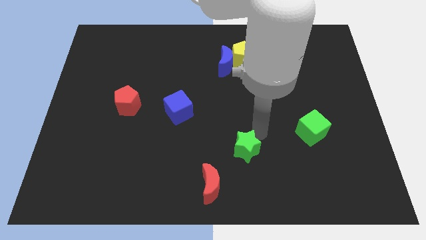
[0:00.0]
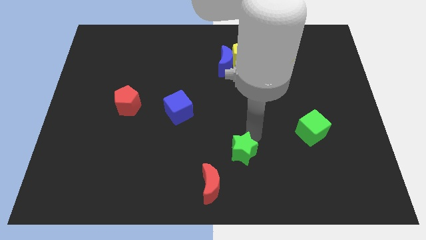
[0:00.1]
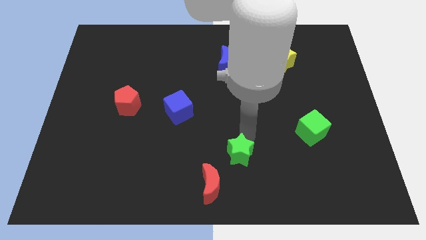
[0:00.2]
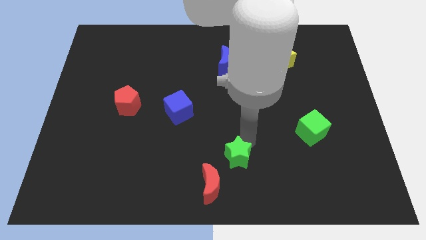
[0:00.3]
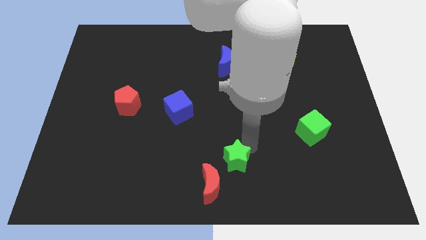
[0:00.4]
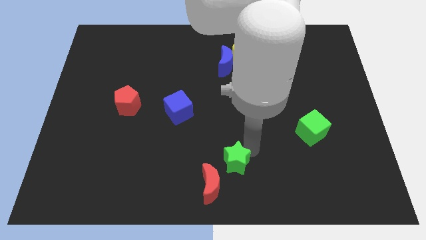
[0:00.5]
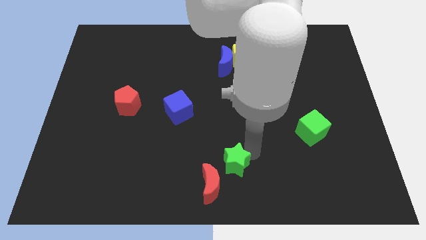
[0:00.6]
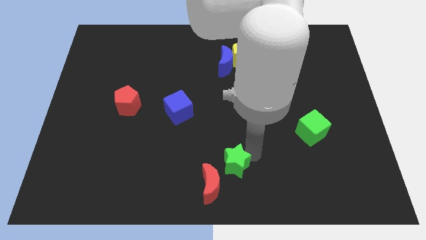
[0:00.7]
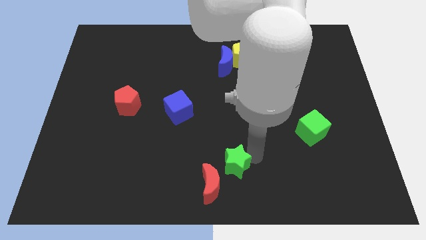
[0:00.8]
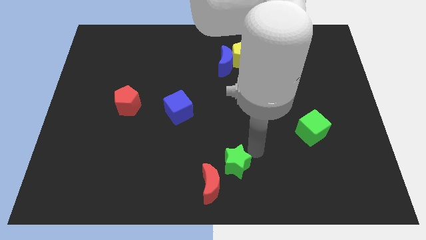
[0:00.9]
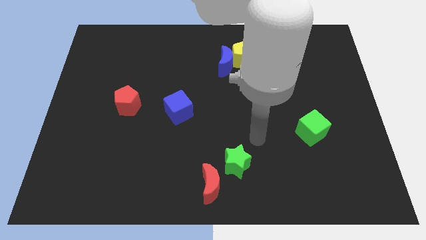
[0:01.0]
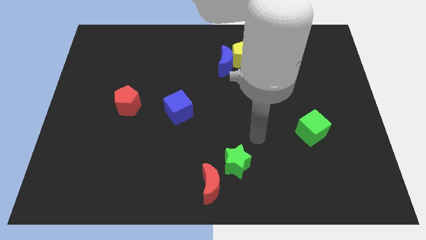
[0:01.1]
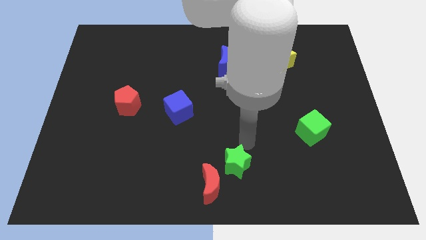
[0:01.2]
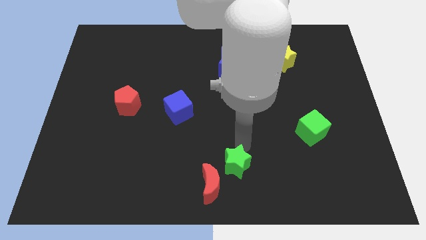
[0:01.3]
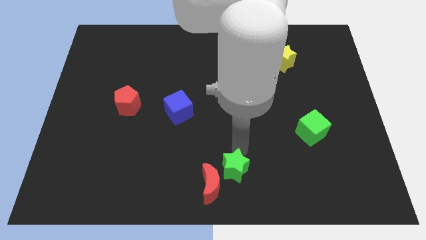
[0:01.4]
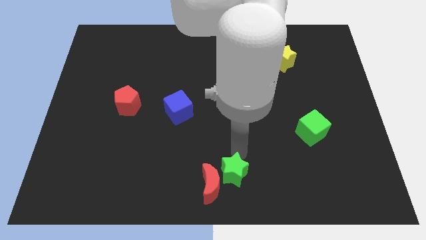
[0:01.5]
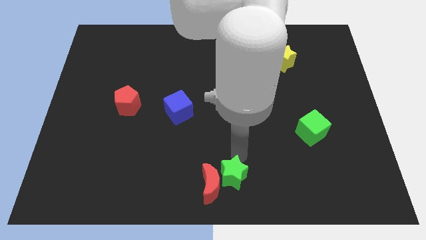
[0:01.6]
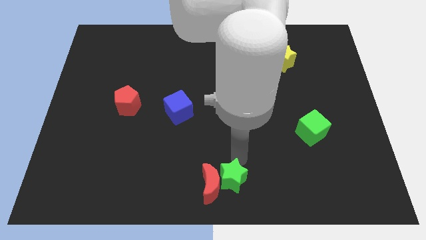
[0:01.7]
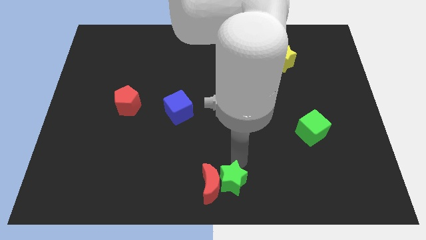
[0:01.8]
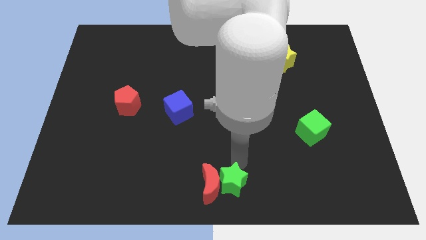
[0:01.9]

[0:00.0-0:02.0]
push the green star to the right of the red crescent

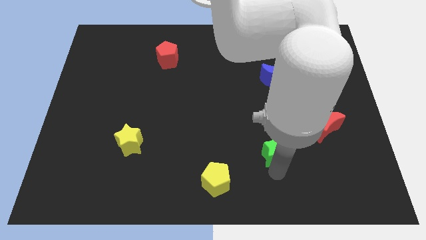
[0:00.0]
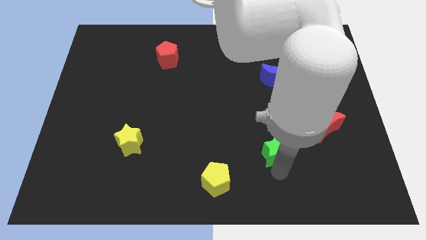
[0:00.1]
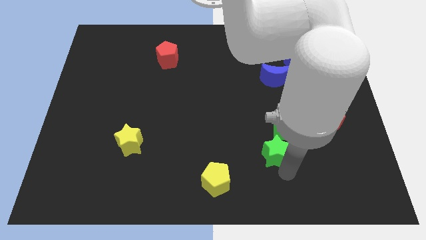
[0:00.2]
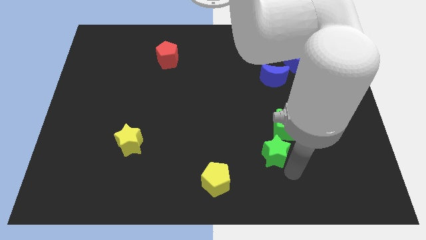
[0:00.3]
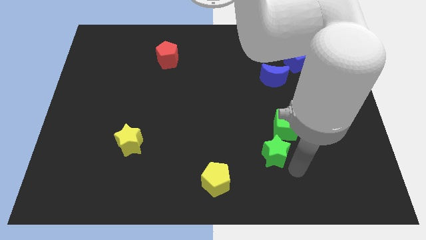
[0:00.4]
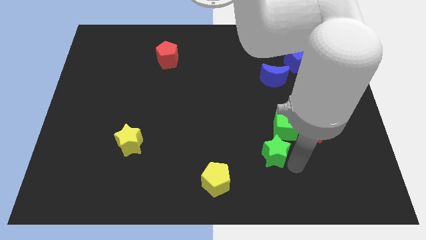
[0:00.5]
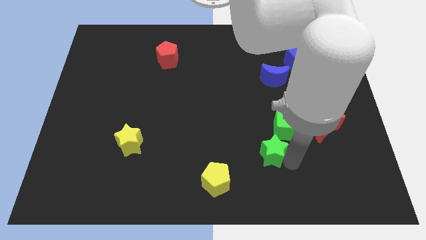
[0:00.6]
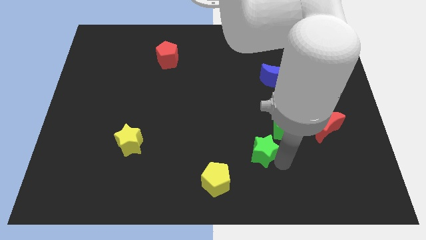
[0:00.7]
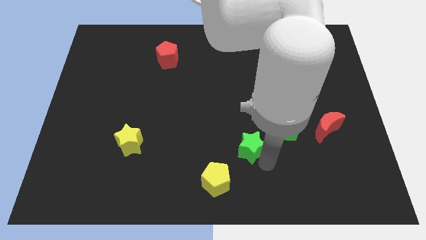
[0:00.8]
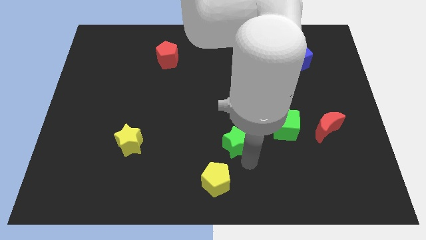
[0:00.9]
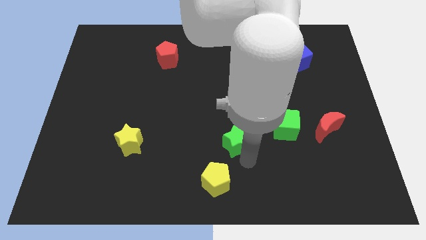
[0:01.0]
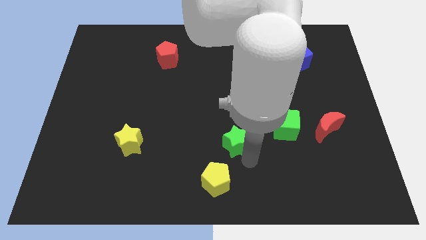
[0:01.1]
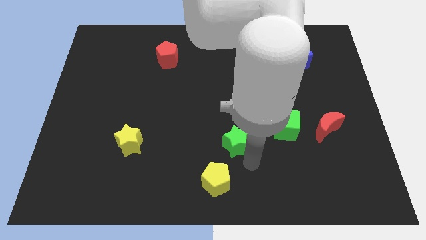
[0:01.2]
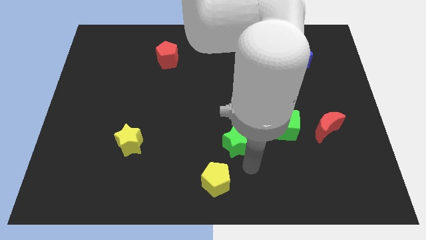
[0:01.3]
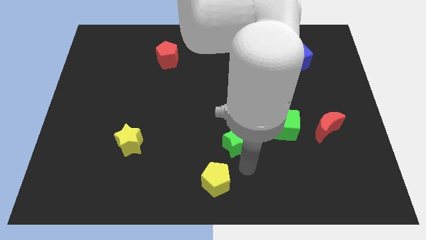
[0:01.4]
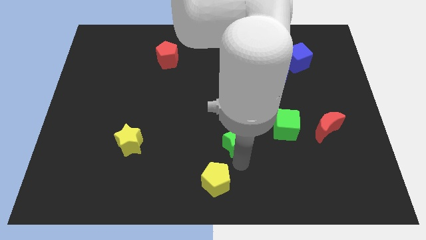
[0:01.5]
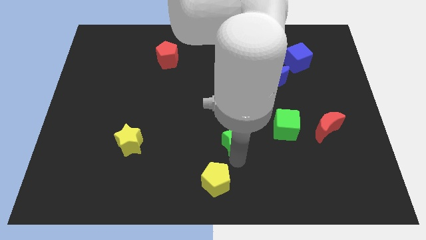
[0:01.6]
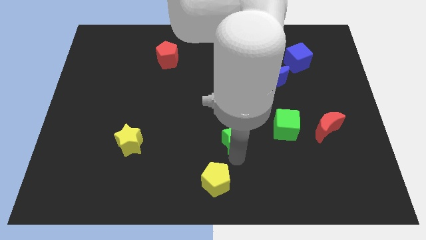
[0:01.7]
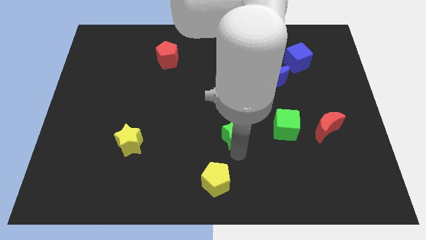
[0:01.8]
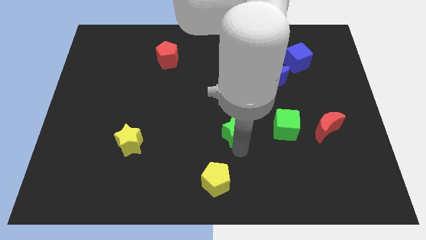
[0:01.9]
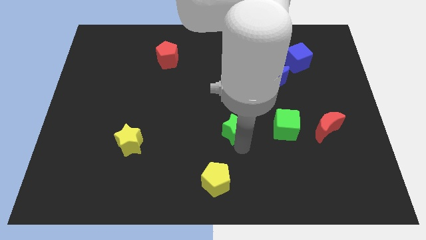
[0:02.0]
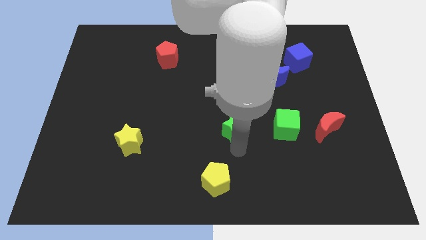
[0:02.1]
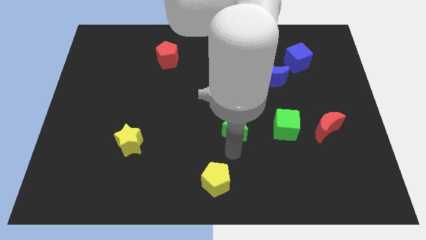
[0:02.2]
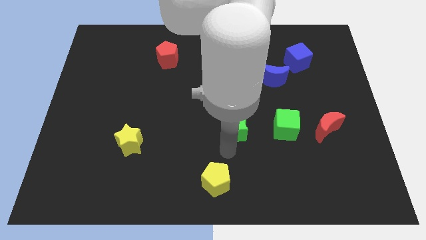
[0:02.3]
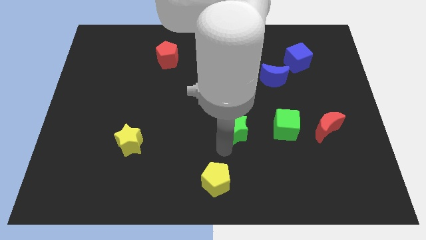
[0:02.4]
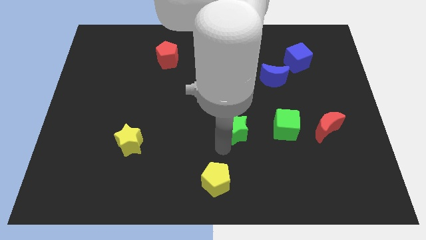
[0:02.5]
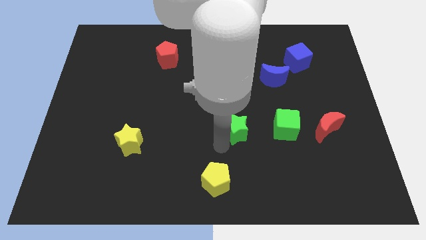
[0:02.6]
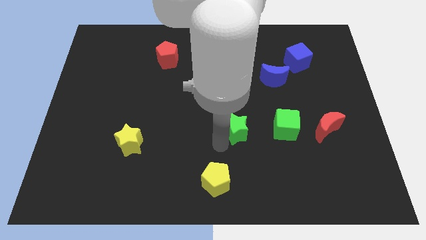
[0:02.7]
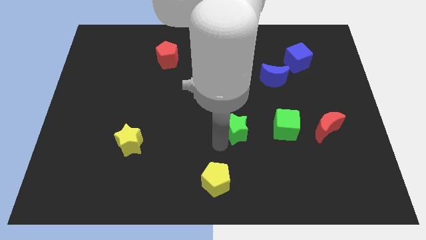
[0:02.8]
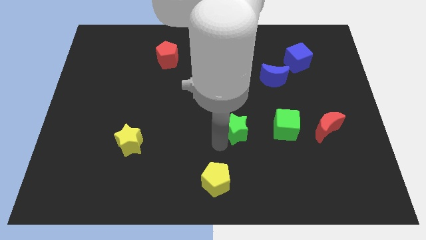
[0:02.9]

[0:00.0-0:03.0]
push the green star to the center of the board

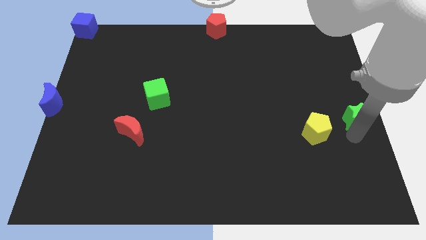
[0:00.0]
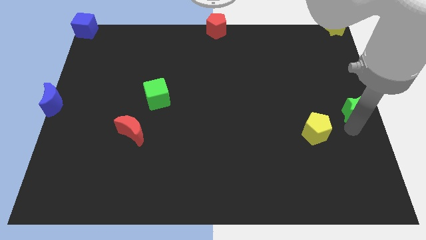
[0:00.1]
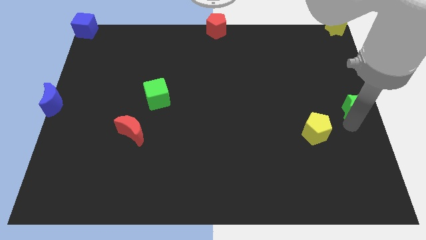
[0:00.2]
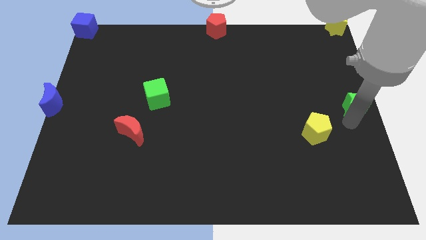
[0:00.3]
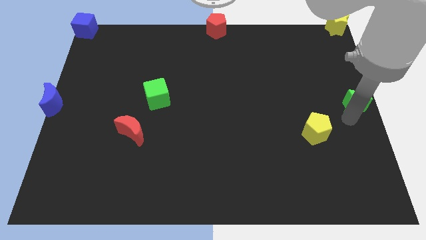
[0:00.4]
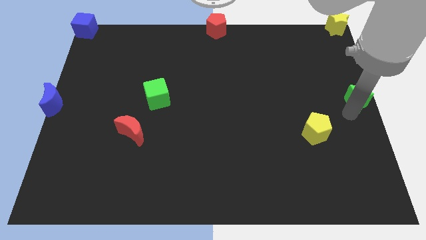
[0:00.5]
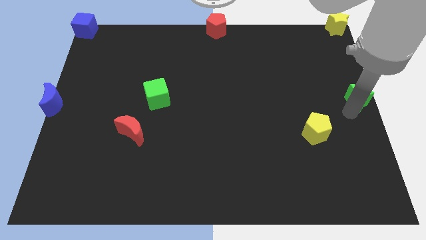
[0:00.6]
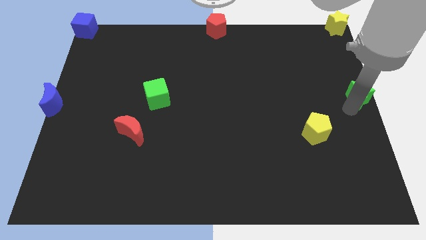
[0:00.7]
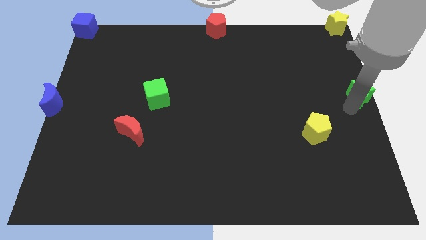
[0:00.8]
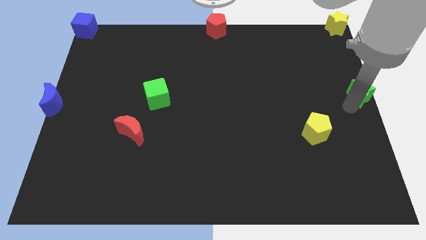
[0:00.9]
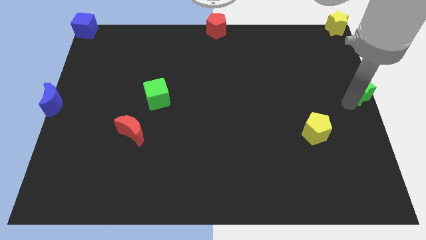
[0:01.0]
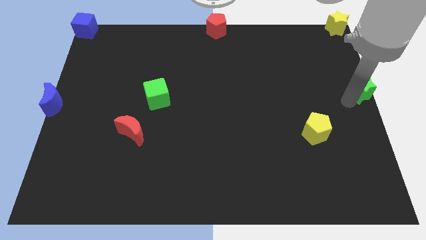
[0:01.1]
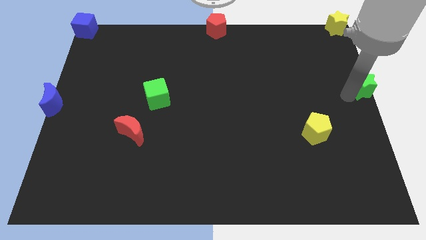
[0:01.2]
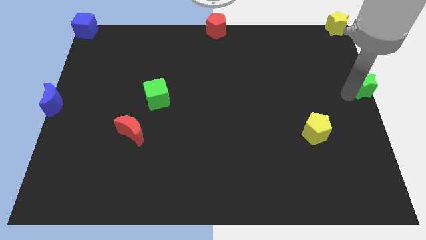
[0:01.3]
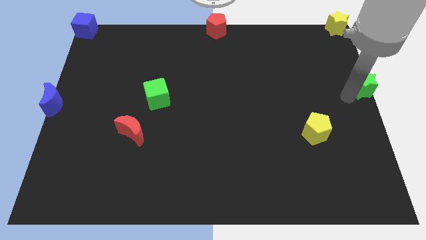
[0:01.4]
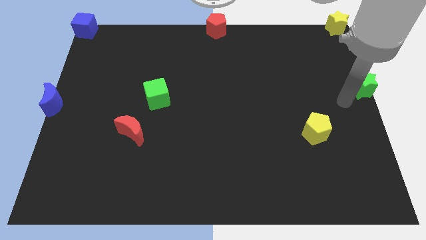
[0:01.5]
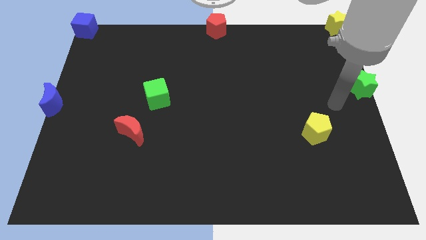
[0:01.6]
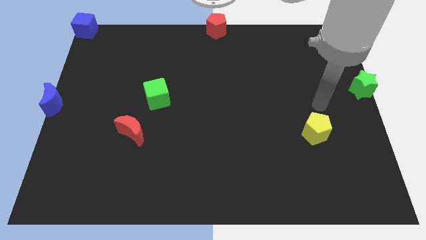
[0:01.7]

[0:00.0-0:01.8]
slide the green star to the right center

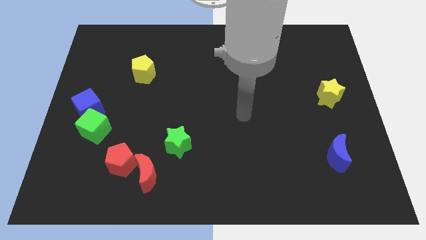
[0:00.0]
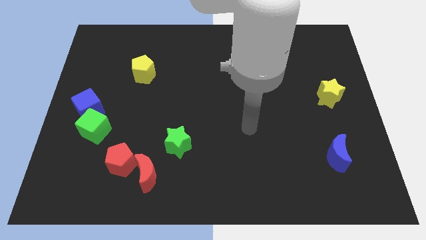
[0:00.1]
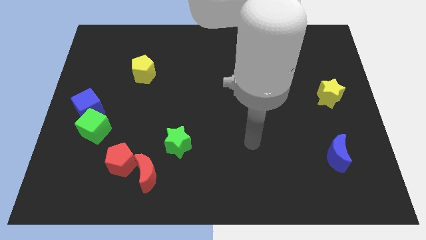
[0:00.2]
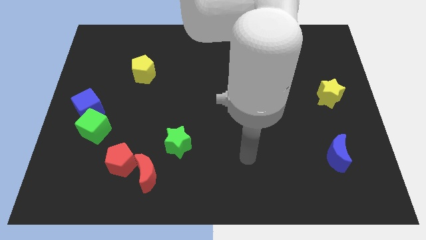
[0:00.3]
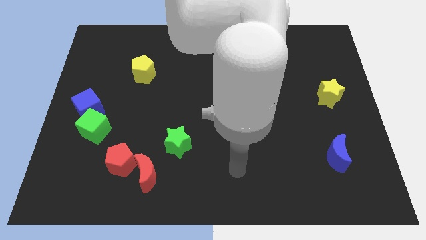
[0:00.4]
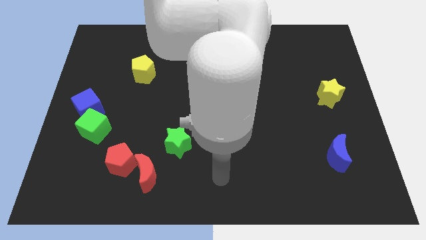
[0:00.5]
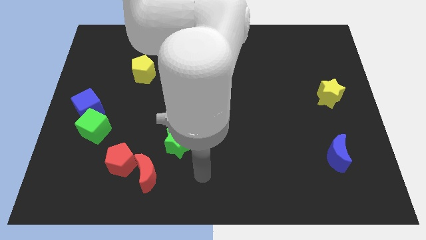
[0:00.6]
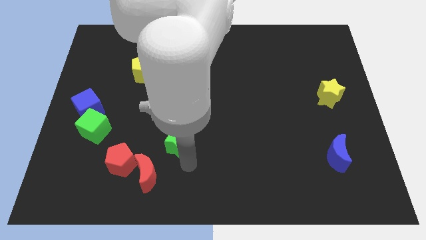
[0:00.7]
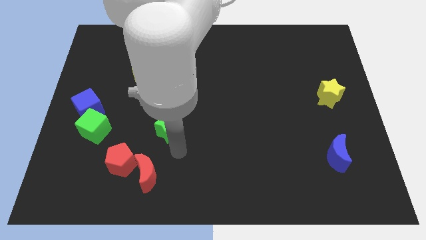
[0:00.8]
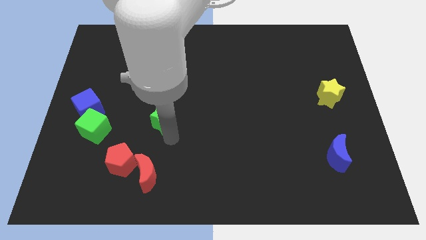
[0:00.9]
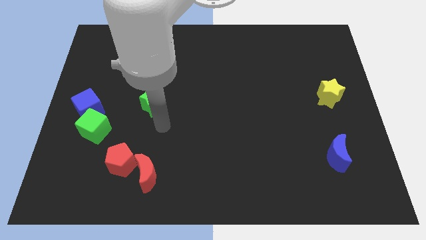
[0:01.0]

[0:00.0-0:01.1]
push the green star closer to the yellow pentagon

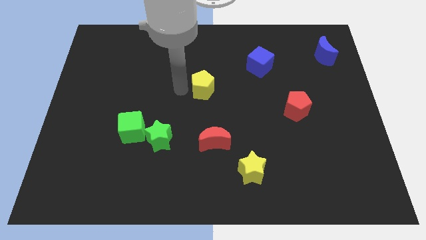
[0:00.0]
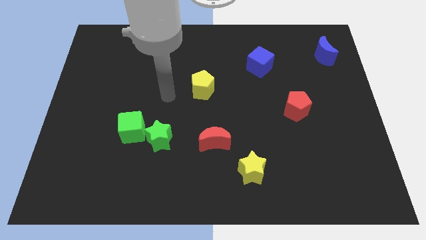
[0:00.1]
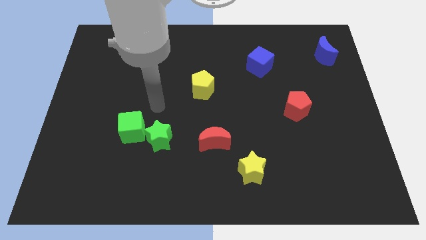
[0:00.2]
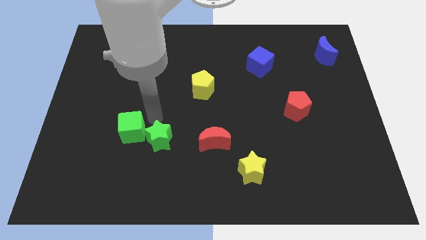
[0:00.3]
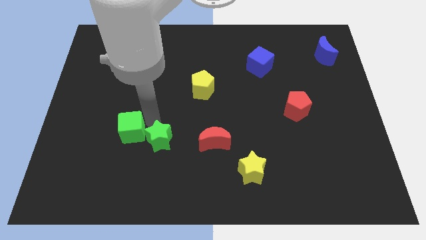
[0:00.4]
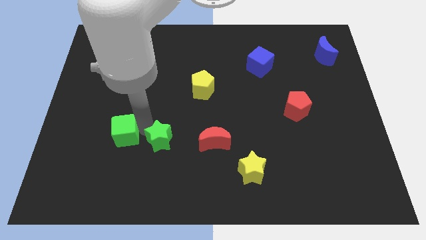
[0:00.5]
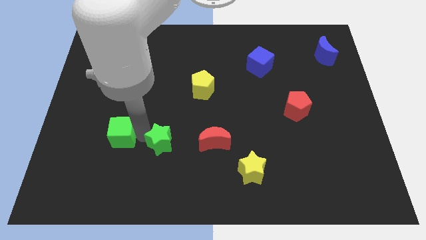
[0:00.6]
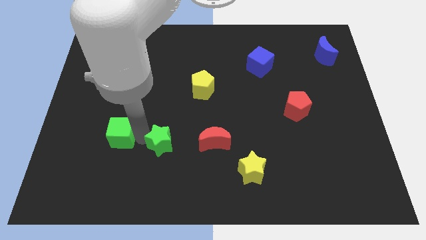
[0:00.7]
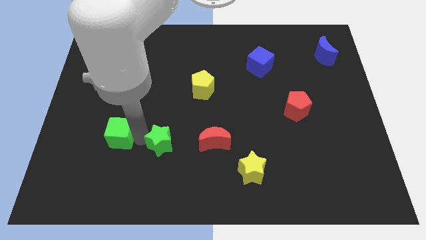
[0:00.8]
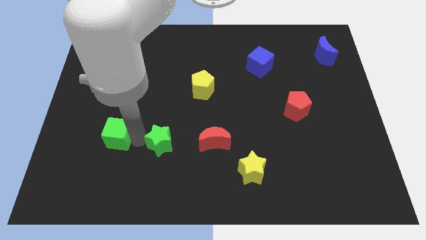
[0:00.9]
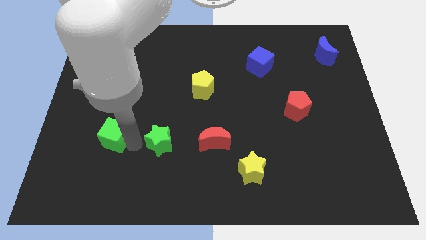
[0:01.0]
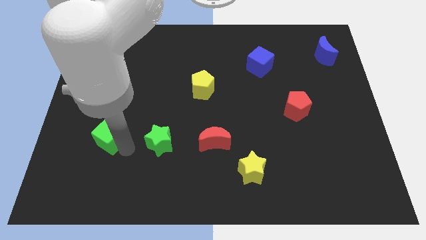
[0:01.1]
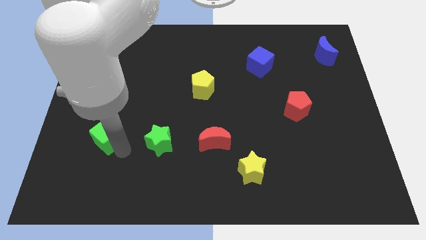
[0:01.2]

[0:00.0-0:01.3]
separate the green star and the green cube
